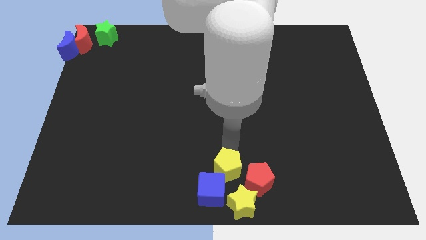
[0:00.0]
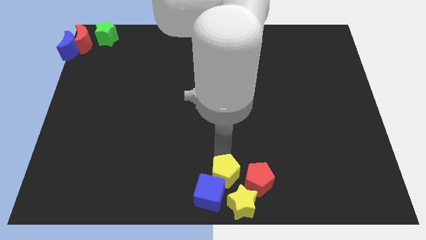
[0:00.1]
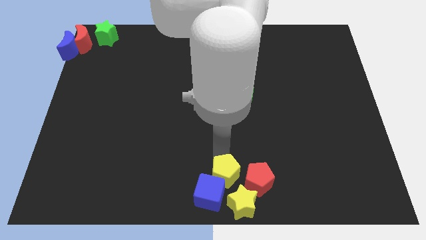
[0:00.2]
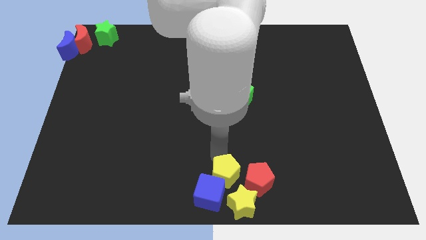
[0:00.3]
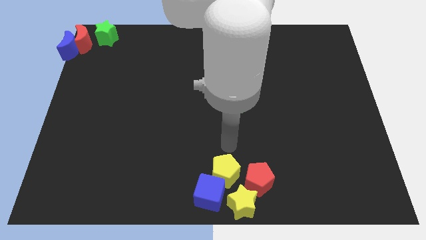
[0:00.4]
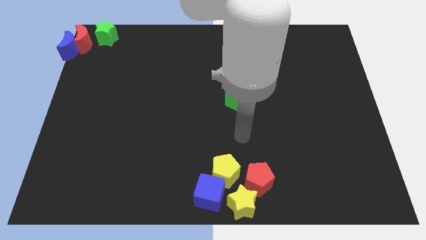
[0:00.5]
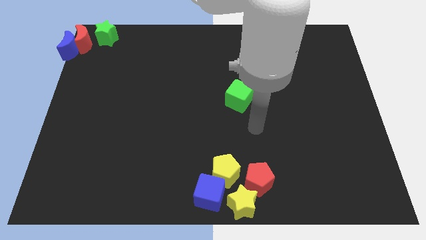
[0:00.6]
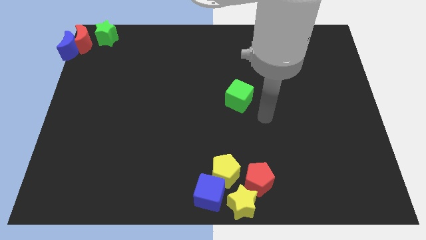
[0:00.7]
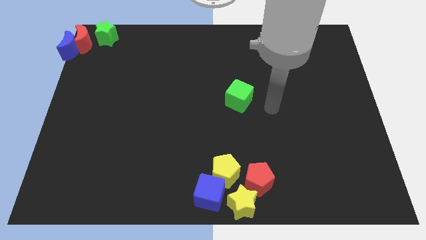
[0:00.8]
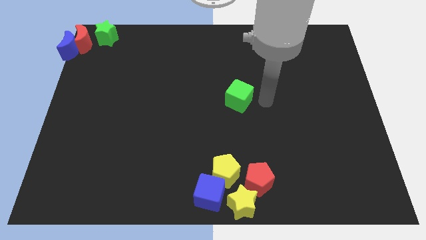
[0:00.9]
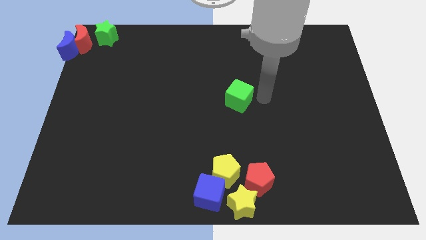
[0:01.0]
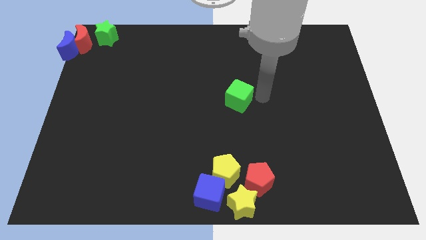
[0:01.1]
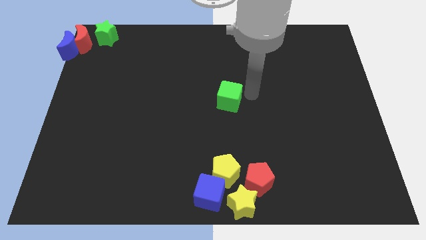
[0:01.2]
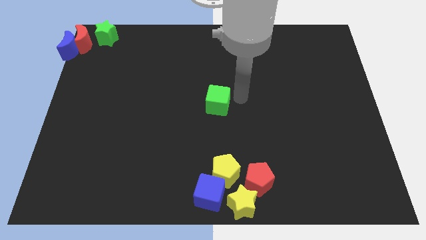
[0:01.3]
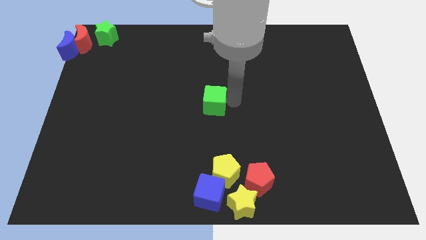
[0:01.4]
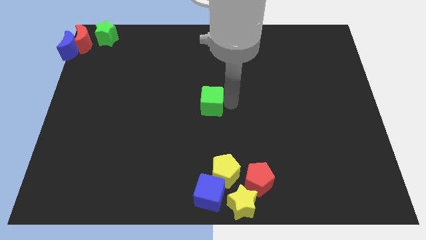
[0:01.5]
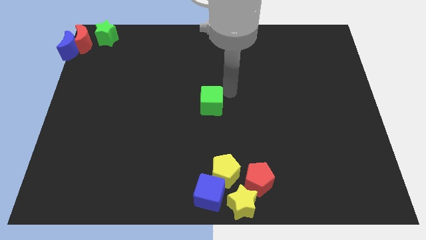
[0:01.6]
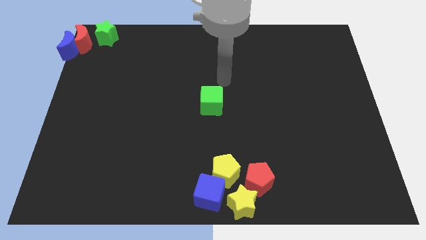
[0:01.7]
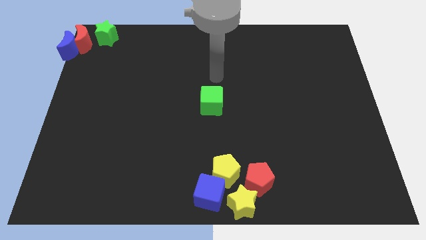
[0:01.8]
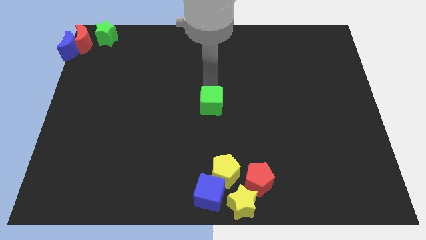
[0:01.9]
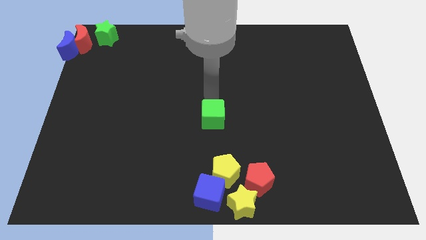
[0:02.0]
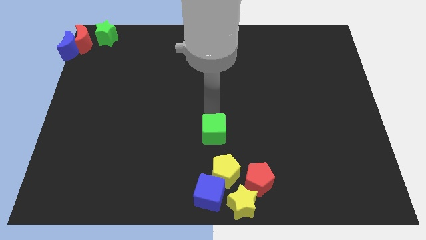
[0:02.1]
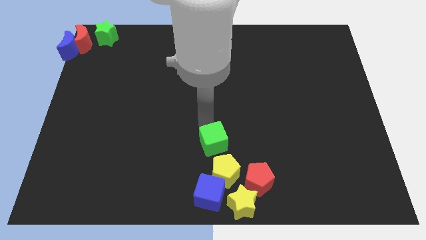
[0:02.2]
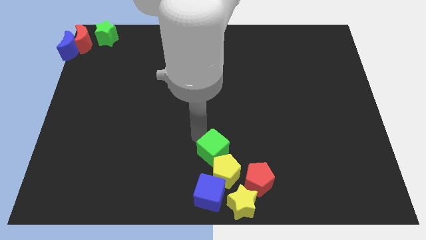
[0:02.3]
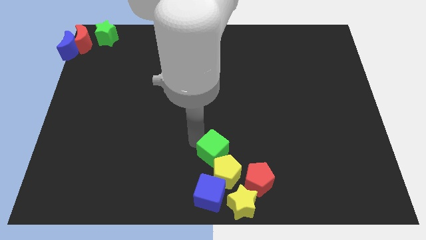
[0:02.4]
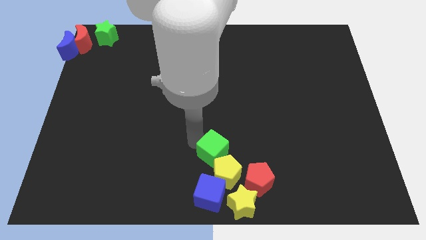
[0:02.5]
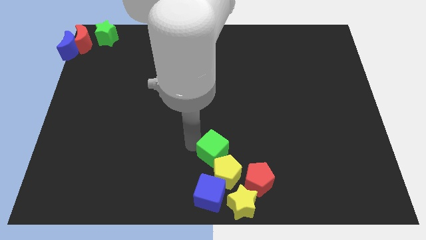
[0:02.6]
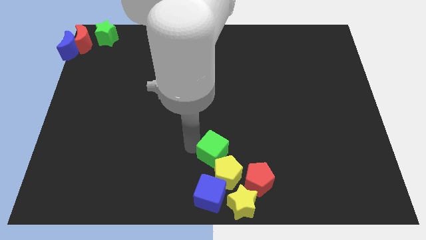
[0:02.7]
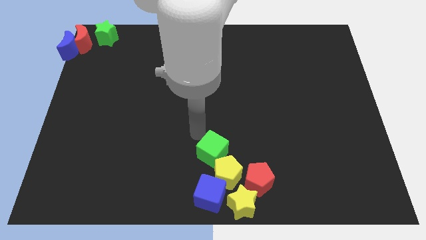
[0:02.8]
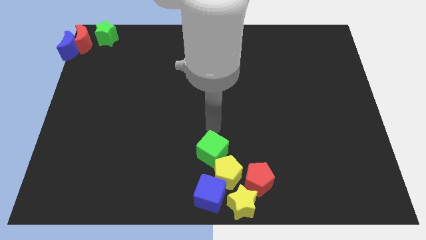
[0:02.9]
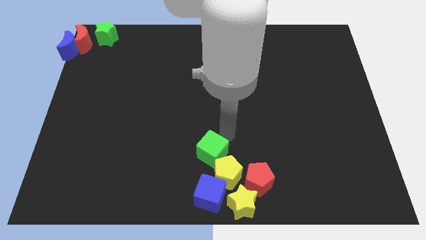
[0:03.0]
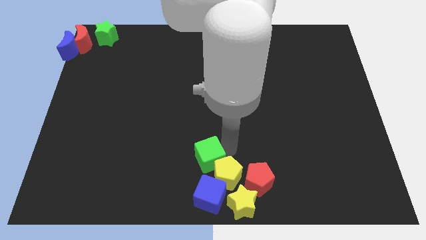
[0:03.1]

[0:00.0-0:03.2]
slide the green cube into the yellow pentagon

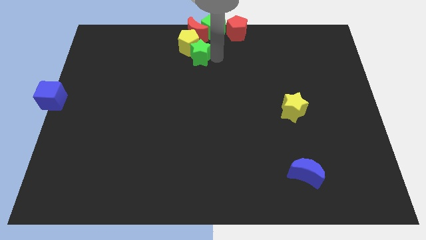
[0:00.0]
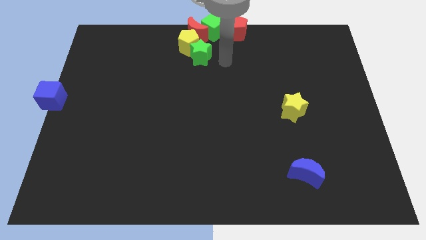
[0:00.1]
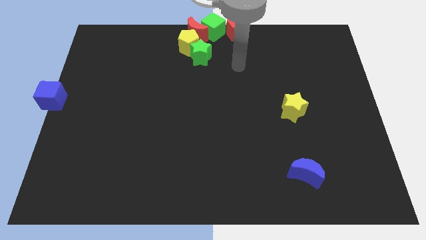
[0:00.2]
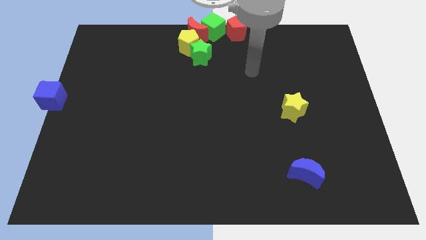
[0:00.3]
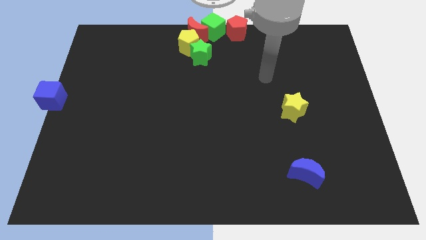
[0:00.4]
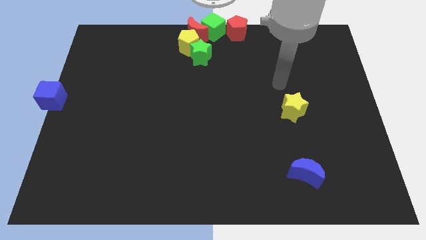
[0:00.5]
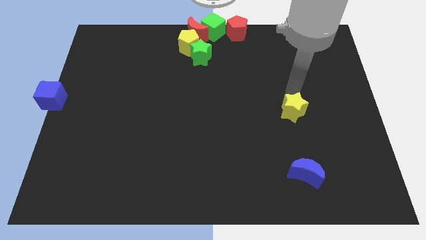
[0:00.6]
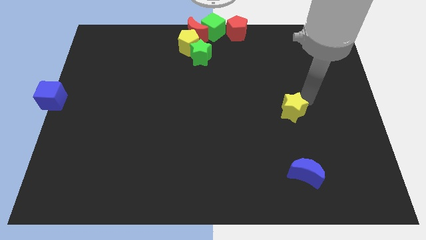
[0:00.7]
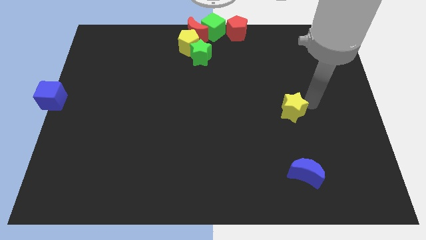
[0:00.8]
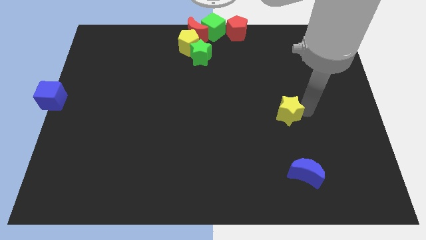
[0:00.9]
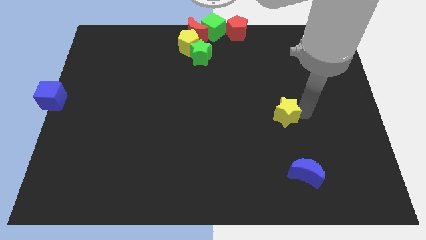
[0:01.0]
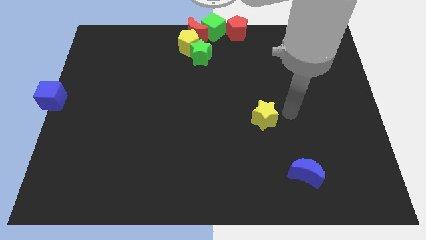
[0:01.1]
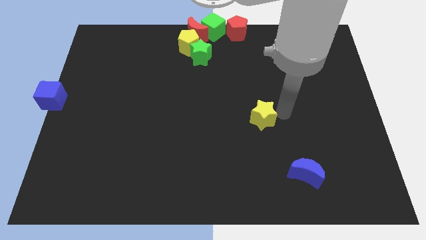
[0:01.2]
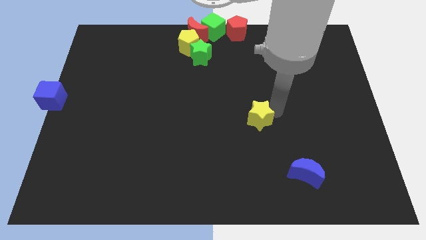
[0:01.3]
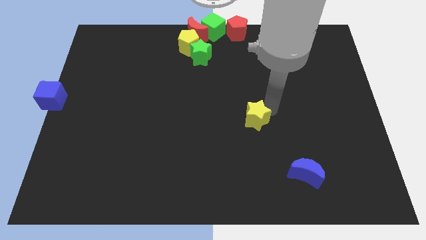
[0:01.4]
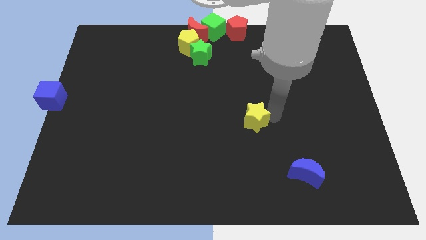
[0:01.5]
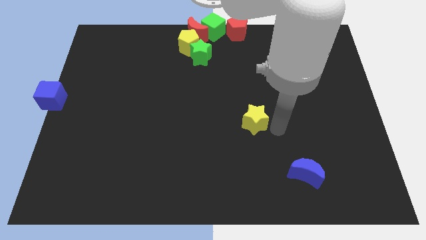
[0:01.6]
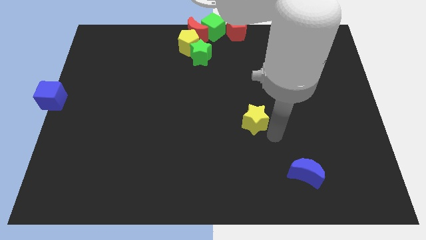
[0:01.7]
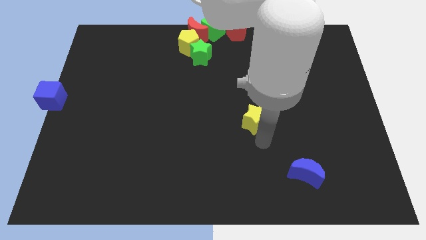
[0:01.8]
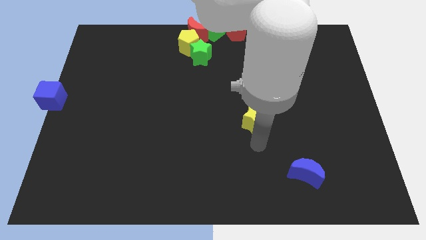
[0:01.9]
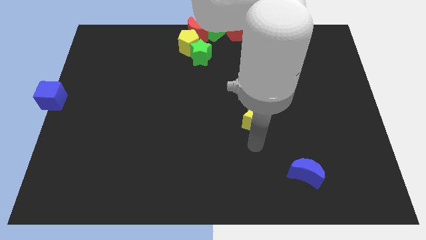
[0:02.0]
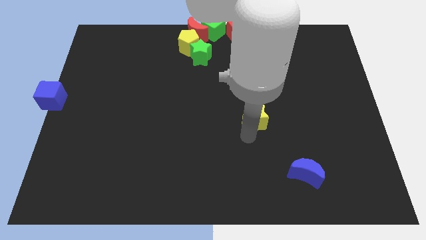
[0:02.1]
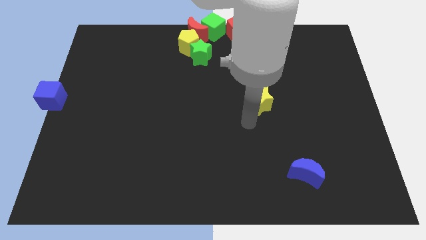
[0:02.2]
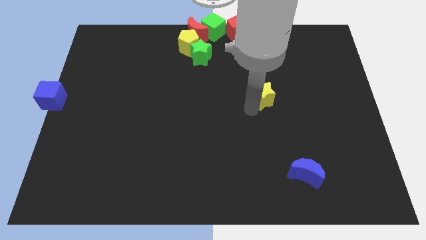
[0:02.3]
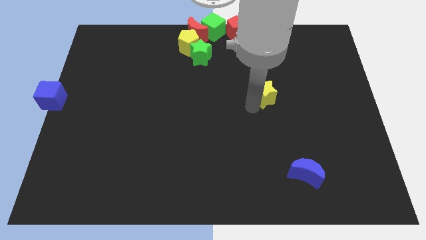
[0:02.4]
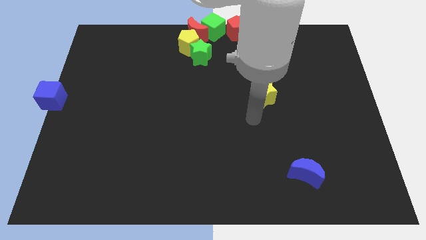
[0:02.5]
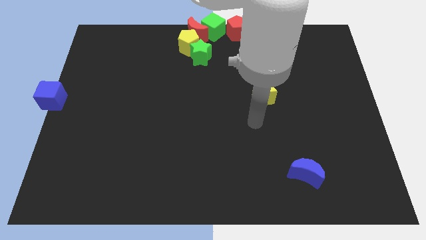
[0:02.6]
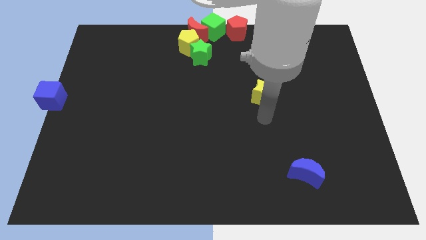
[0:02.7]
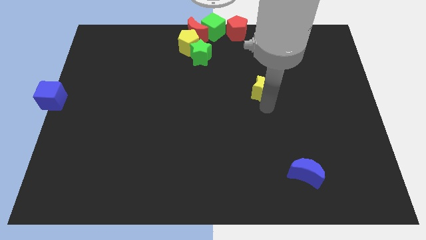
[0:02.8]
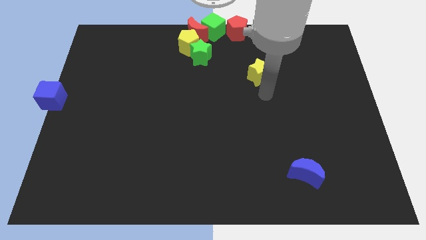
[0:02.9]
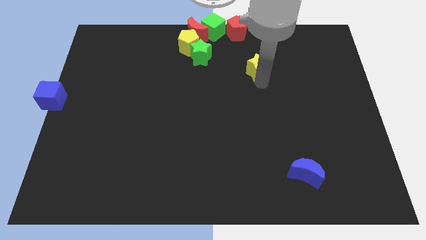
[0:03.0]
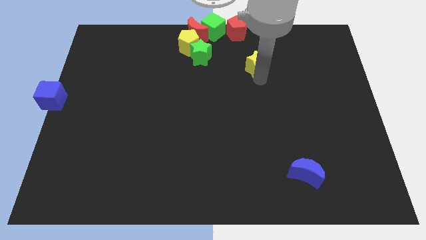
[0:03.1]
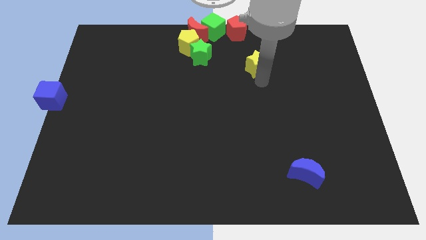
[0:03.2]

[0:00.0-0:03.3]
move the yellow star to the right of green star

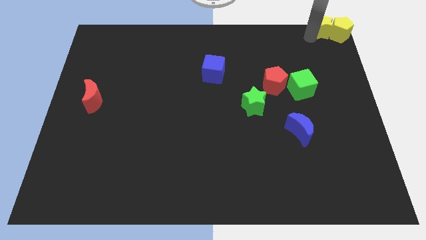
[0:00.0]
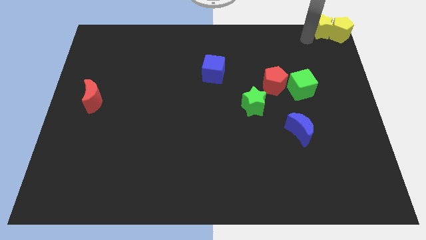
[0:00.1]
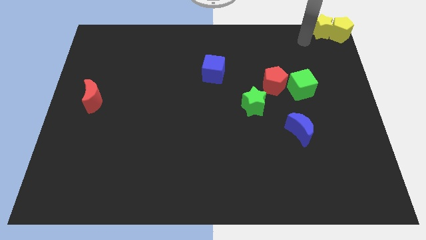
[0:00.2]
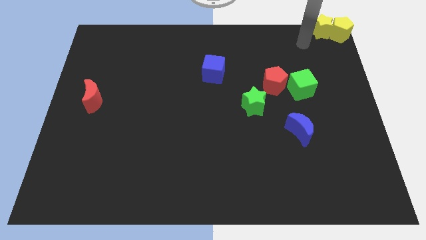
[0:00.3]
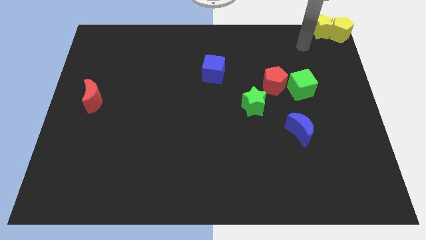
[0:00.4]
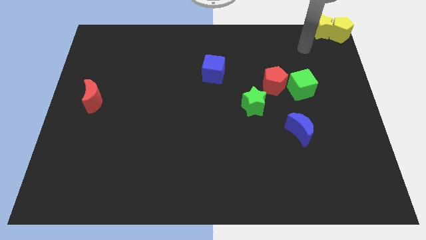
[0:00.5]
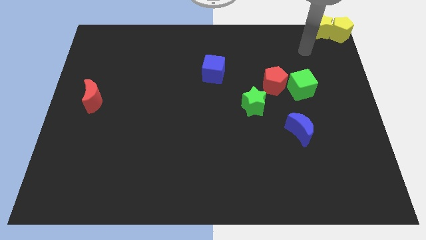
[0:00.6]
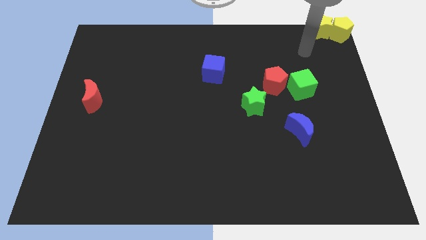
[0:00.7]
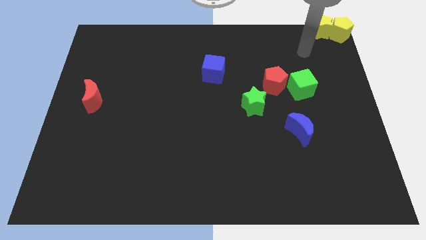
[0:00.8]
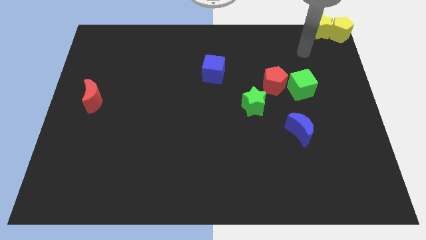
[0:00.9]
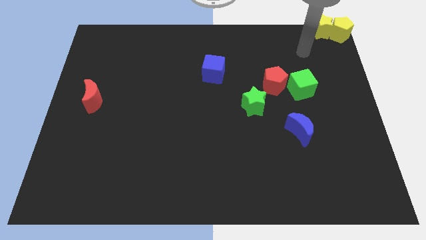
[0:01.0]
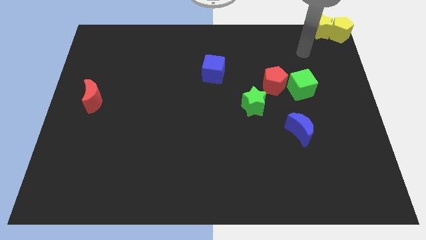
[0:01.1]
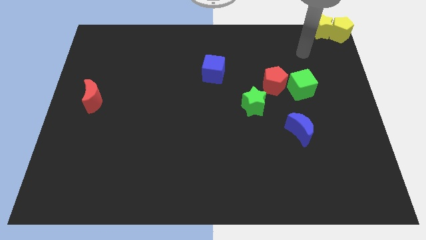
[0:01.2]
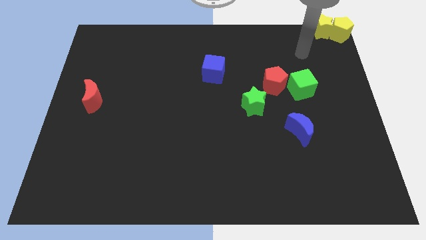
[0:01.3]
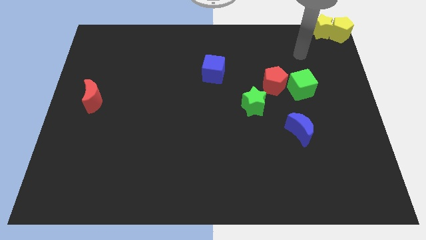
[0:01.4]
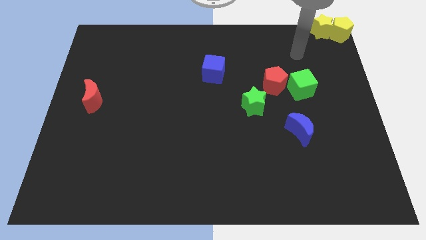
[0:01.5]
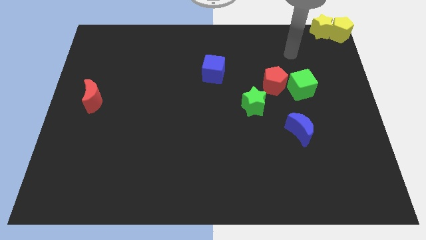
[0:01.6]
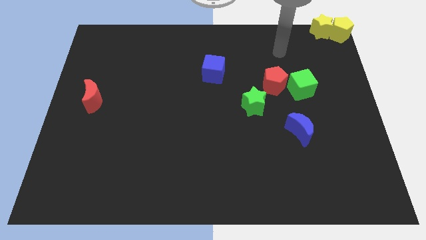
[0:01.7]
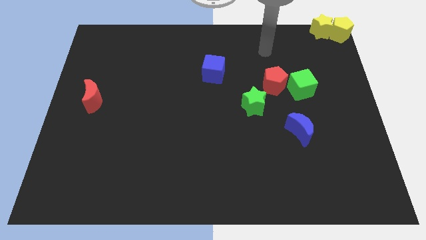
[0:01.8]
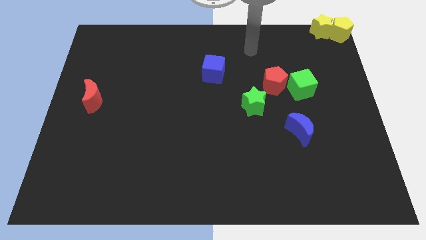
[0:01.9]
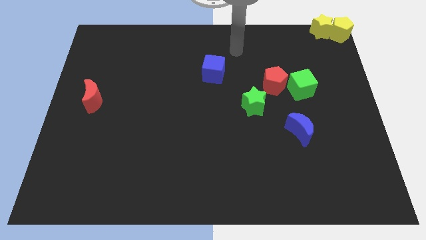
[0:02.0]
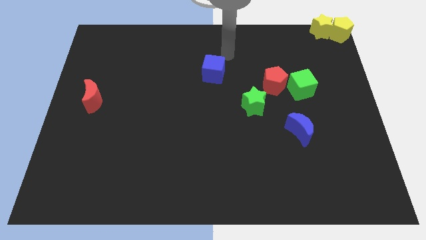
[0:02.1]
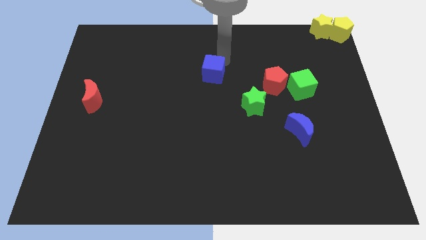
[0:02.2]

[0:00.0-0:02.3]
point your arm on top of blue cube
